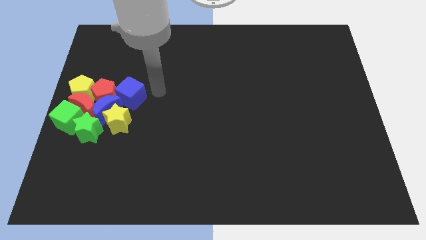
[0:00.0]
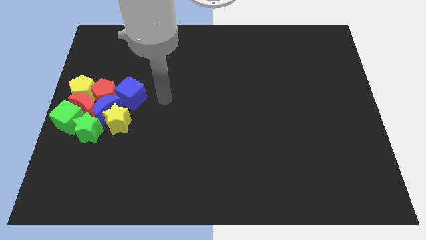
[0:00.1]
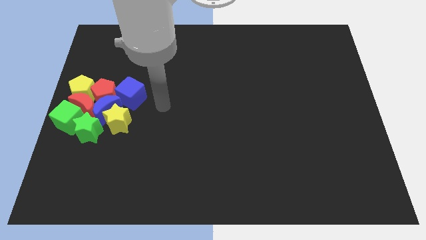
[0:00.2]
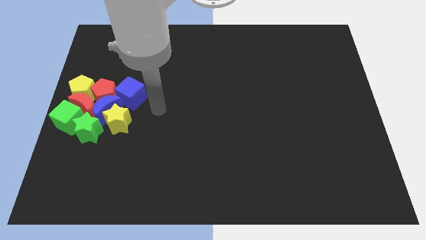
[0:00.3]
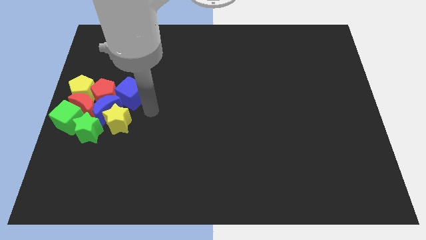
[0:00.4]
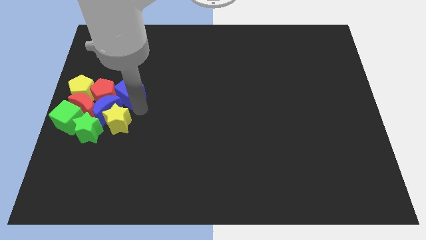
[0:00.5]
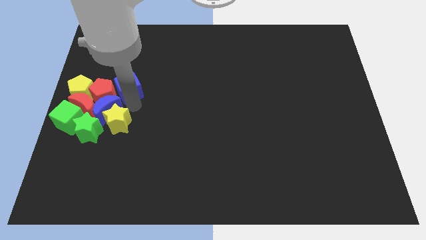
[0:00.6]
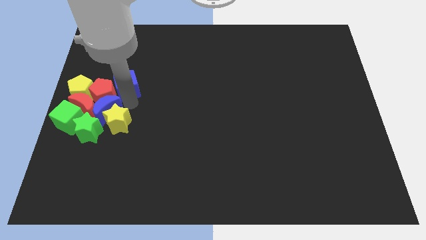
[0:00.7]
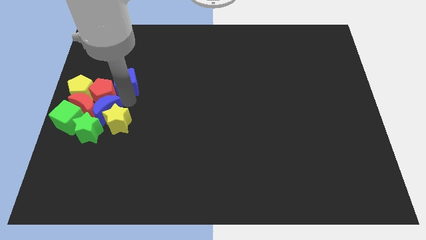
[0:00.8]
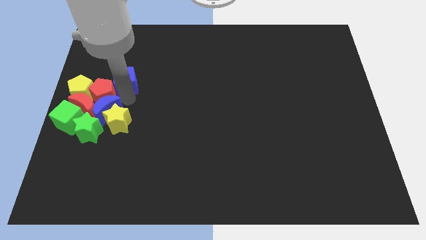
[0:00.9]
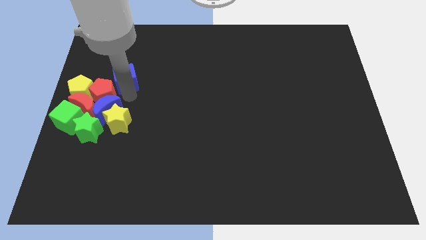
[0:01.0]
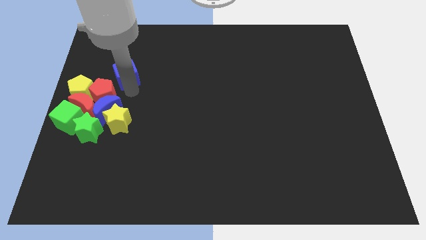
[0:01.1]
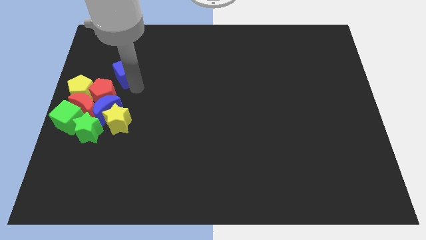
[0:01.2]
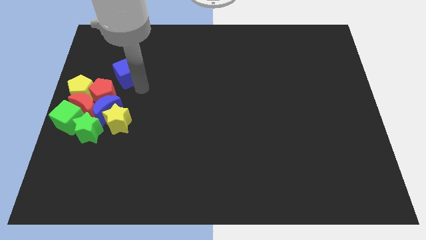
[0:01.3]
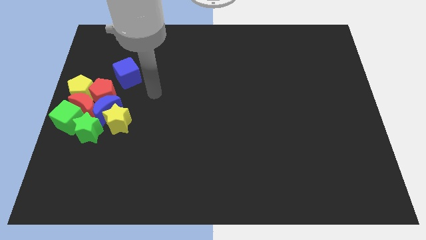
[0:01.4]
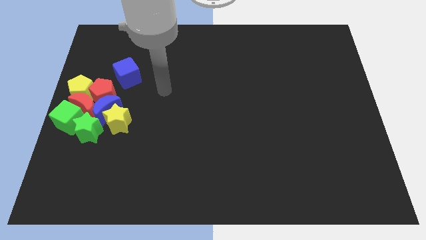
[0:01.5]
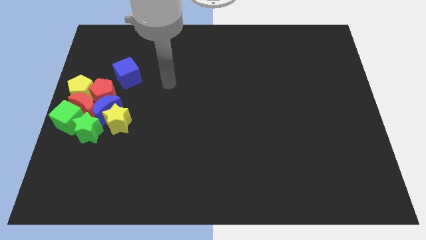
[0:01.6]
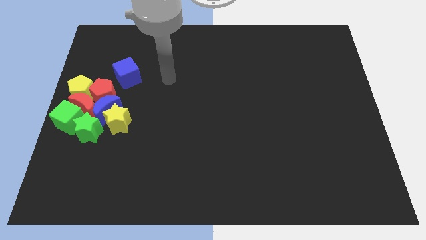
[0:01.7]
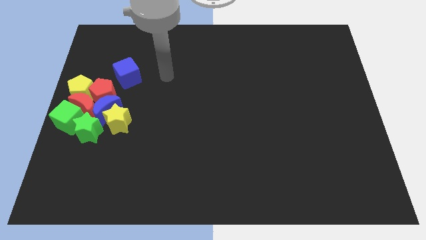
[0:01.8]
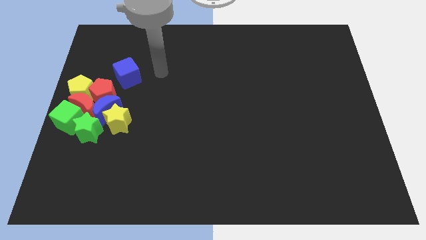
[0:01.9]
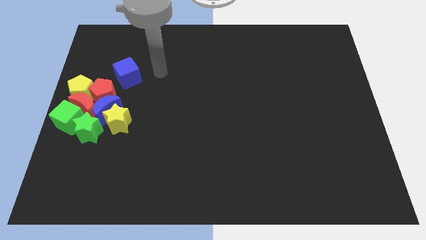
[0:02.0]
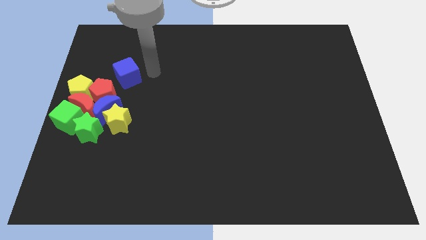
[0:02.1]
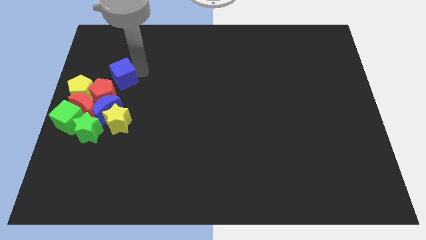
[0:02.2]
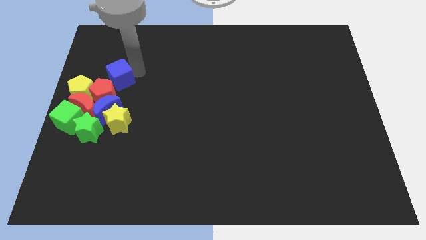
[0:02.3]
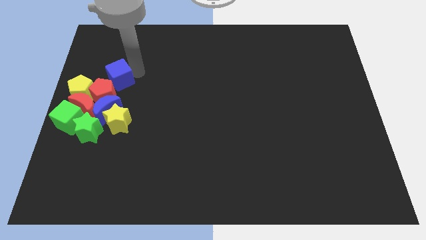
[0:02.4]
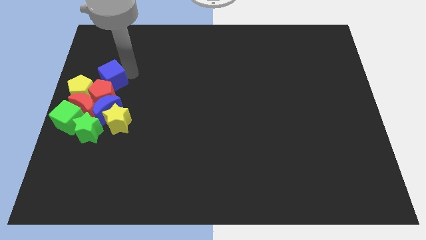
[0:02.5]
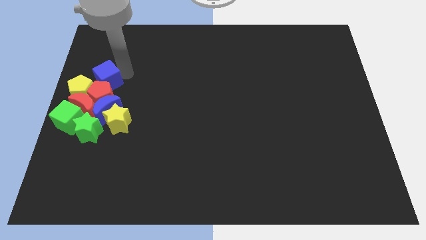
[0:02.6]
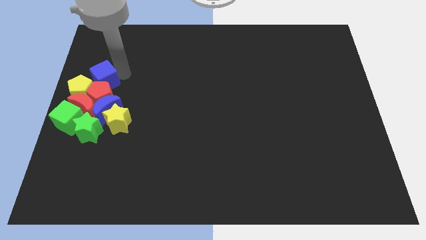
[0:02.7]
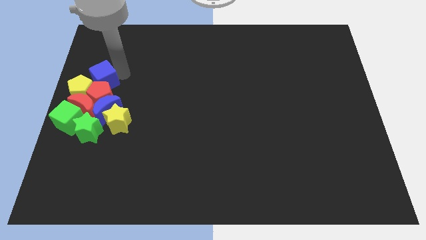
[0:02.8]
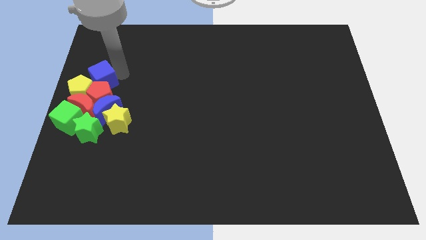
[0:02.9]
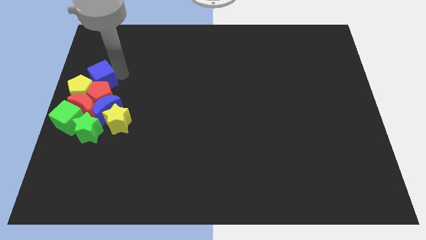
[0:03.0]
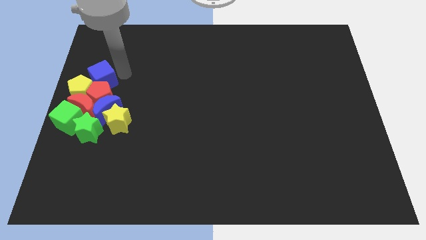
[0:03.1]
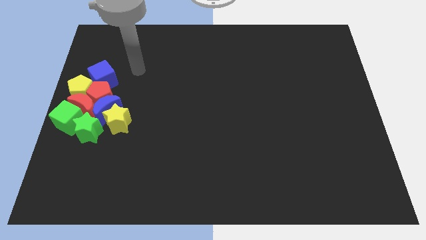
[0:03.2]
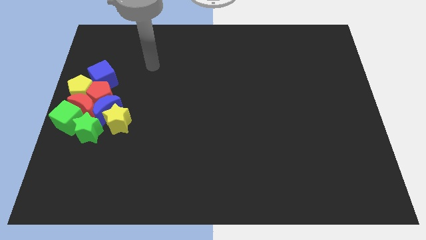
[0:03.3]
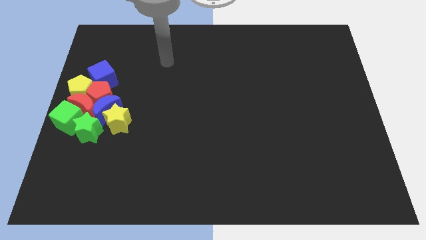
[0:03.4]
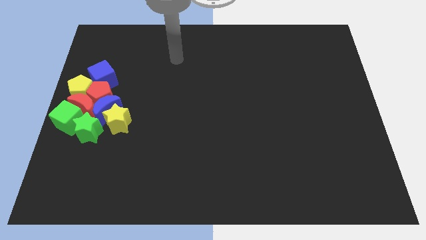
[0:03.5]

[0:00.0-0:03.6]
move the blue cube to the left center of the board

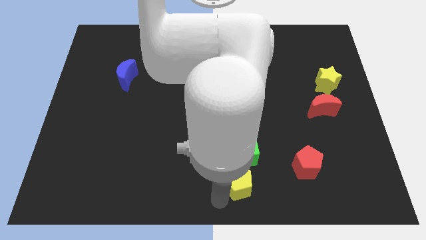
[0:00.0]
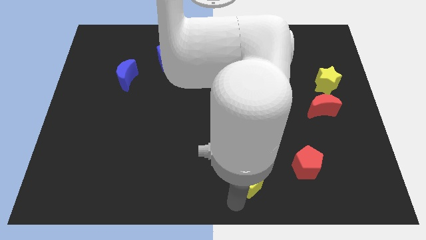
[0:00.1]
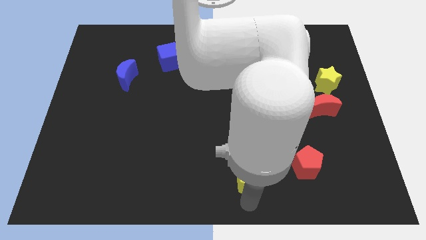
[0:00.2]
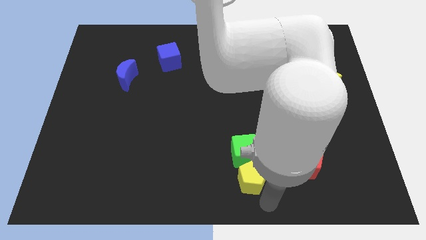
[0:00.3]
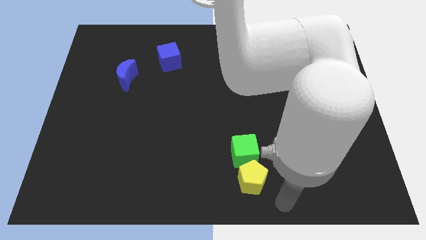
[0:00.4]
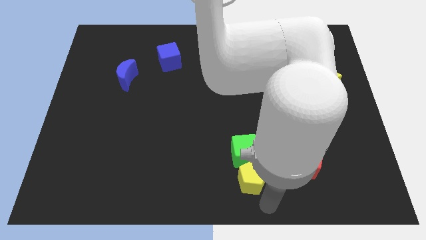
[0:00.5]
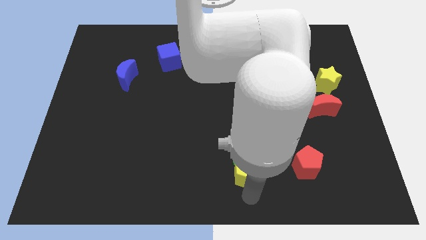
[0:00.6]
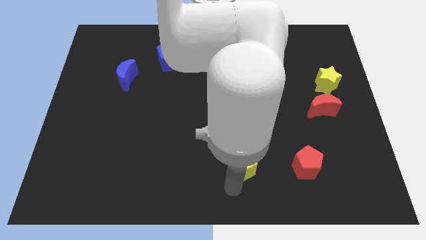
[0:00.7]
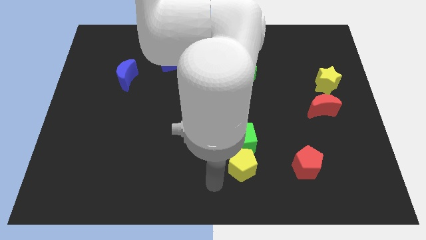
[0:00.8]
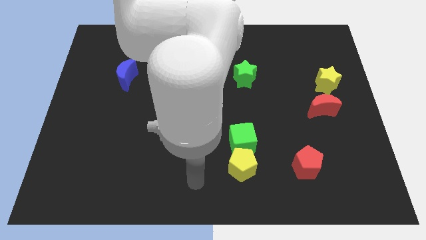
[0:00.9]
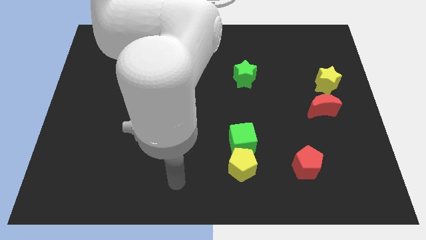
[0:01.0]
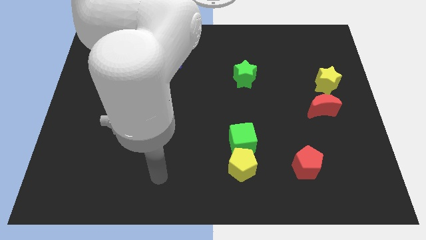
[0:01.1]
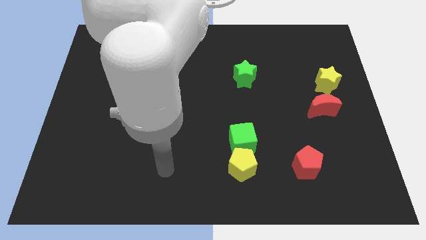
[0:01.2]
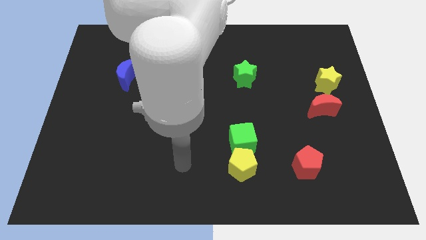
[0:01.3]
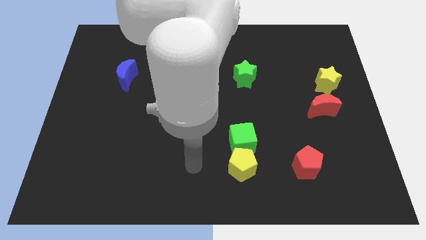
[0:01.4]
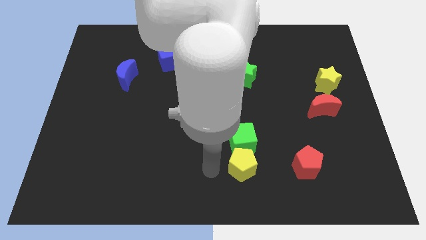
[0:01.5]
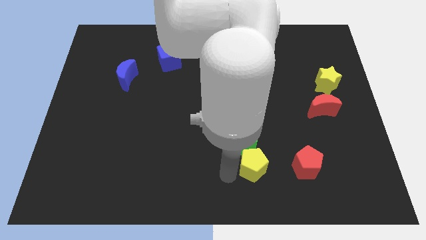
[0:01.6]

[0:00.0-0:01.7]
push the yellow pentagon into the green cube

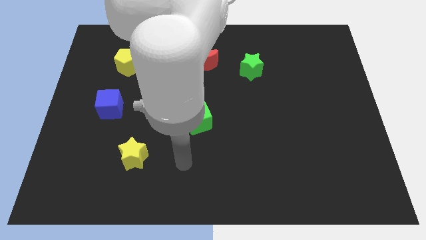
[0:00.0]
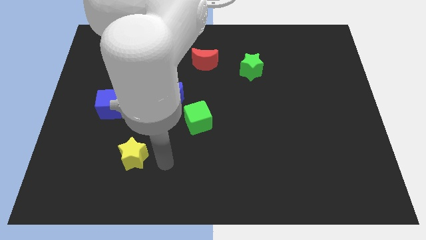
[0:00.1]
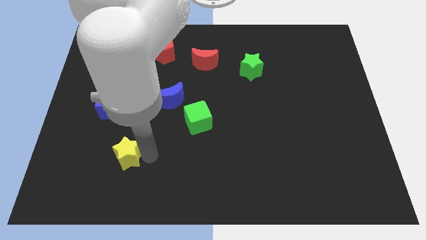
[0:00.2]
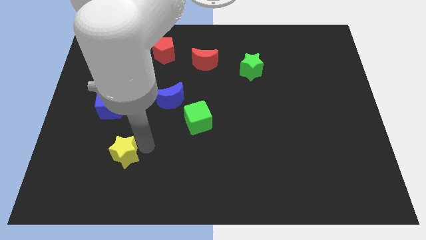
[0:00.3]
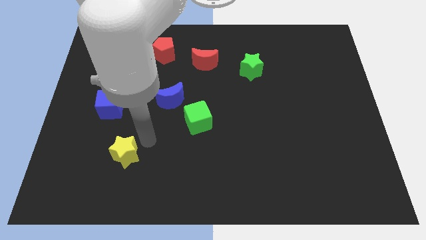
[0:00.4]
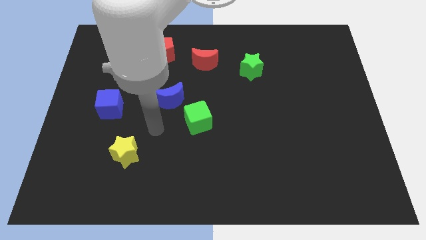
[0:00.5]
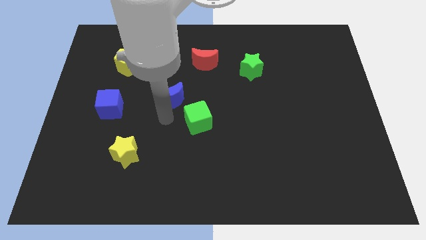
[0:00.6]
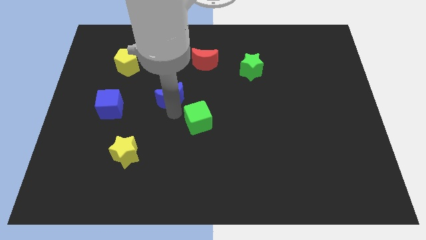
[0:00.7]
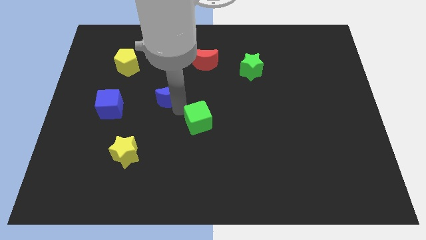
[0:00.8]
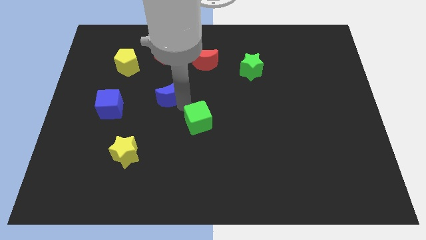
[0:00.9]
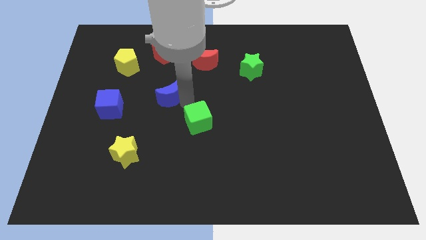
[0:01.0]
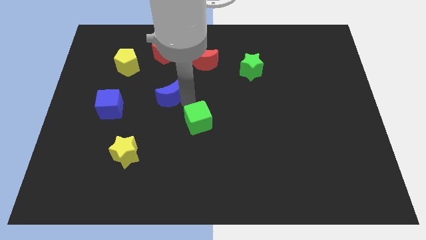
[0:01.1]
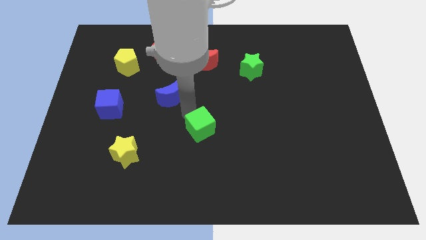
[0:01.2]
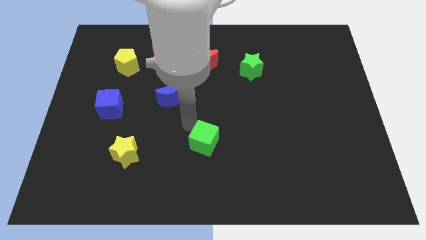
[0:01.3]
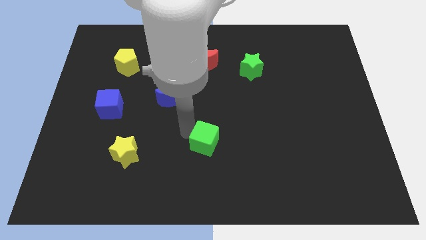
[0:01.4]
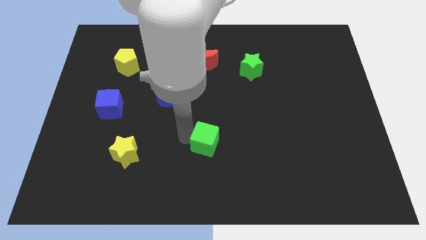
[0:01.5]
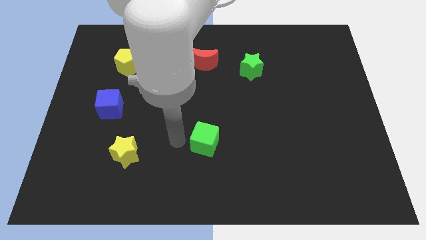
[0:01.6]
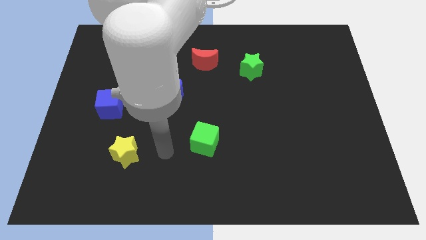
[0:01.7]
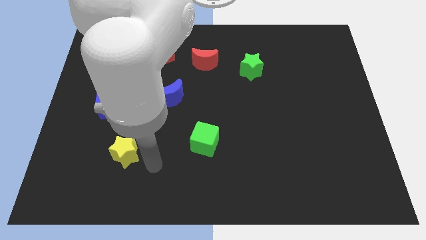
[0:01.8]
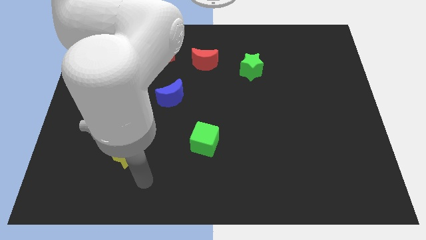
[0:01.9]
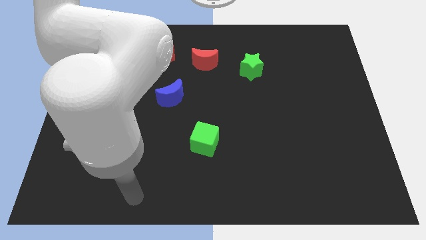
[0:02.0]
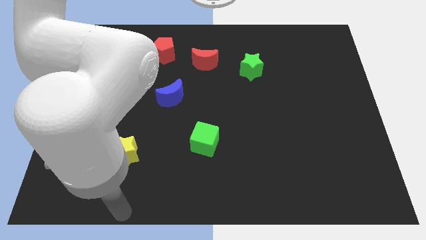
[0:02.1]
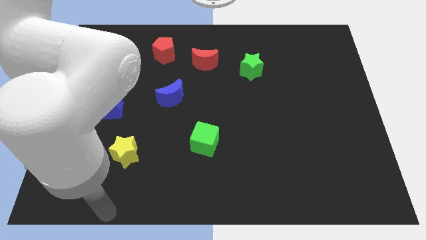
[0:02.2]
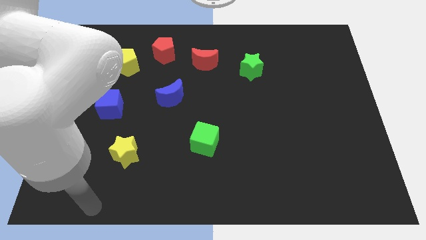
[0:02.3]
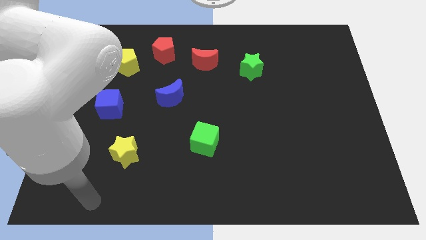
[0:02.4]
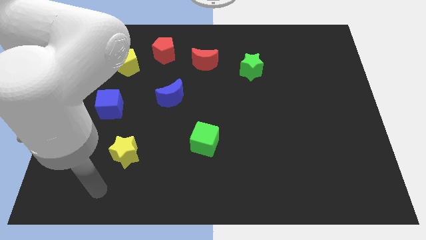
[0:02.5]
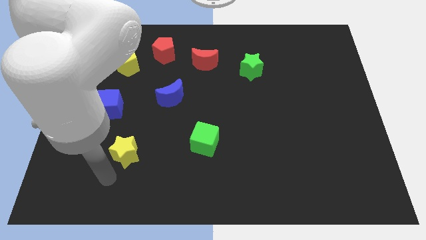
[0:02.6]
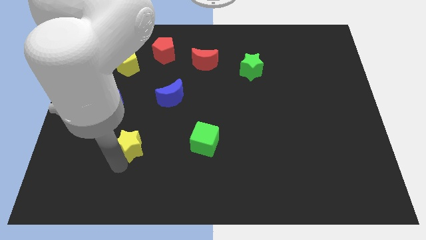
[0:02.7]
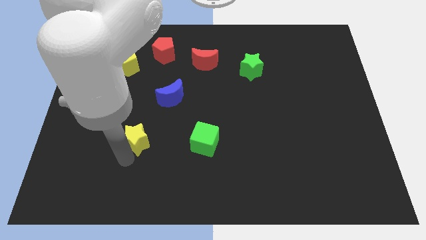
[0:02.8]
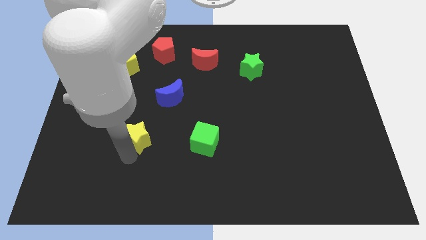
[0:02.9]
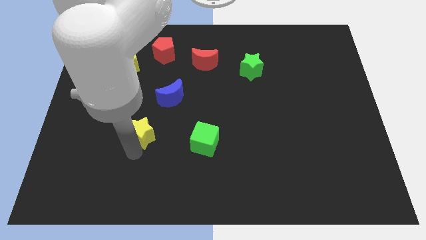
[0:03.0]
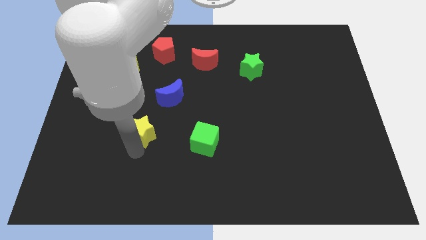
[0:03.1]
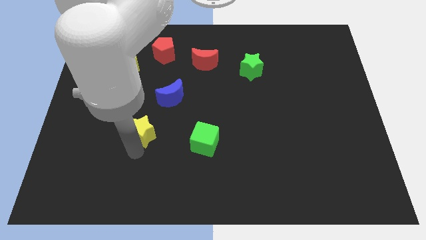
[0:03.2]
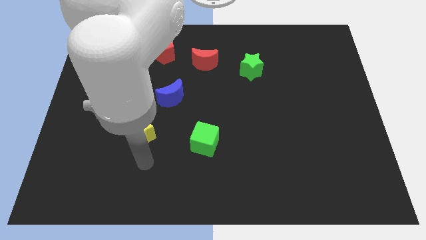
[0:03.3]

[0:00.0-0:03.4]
place the green cube and the yellow star in a horizontal line

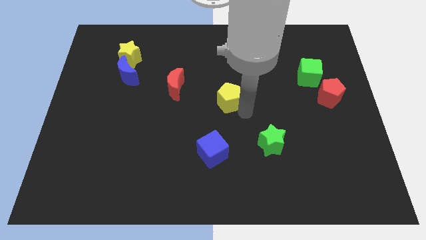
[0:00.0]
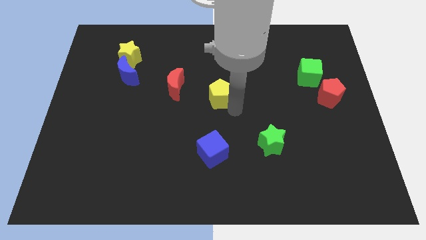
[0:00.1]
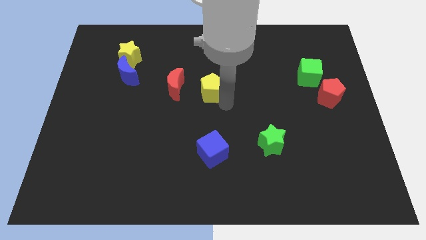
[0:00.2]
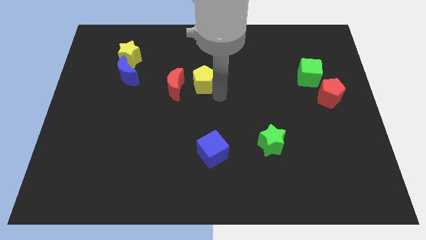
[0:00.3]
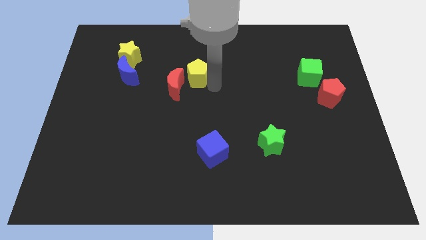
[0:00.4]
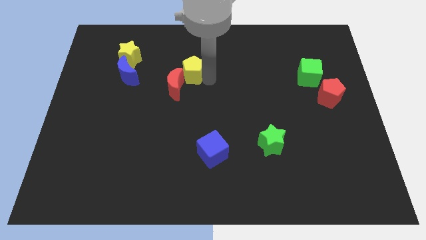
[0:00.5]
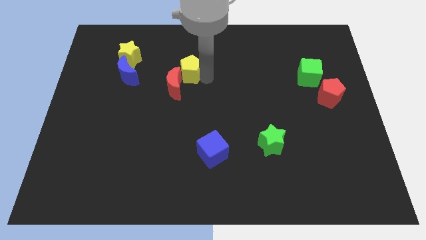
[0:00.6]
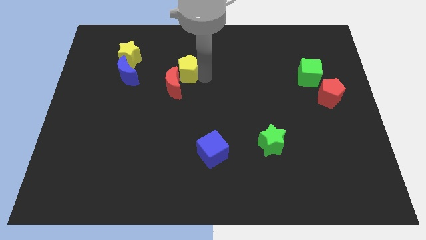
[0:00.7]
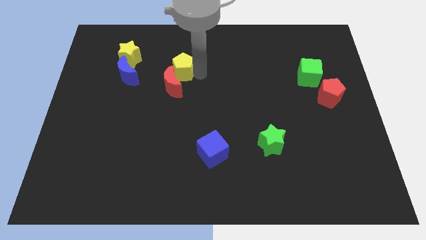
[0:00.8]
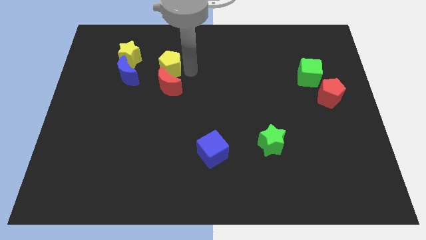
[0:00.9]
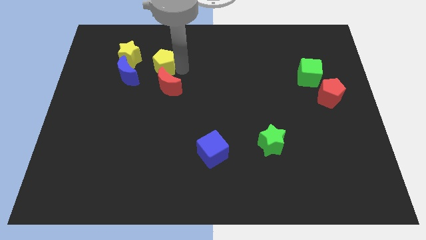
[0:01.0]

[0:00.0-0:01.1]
move yellow pentagon above red moon
